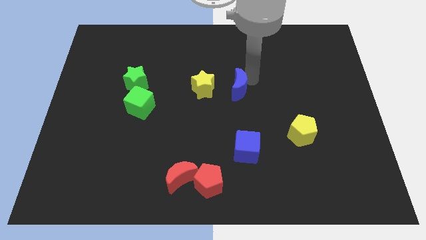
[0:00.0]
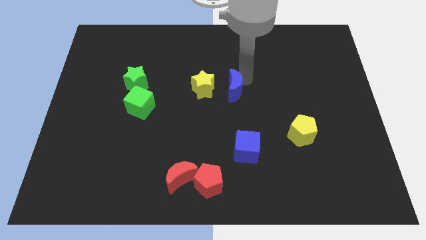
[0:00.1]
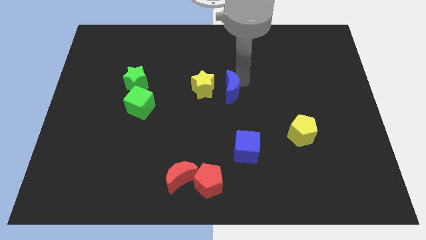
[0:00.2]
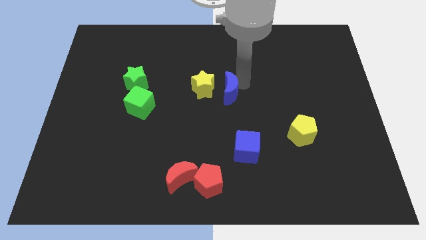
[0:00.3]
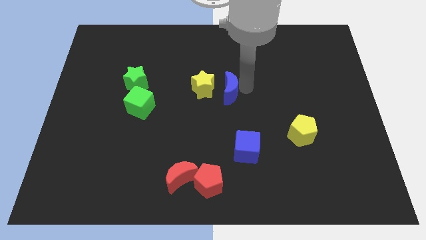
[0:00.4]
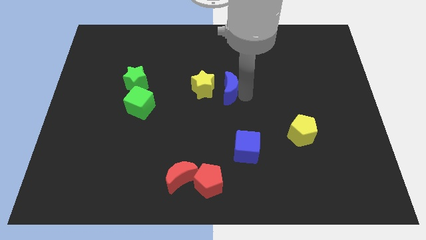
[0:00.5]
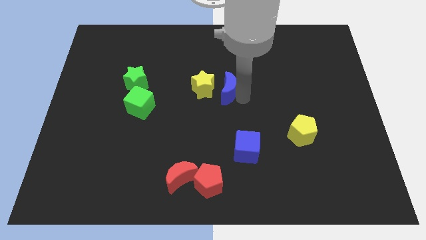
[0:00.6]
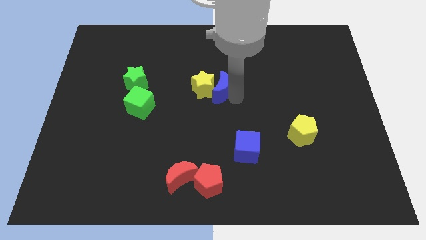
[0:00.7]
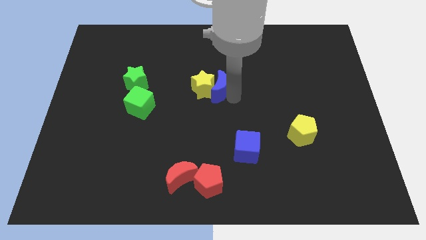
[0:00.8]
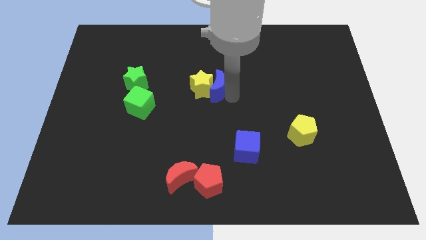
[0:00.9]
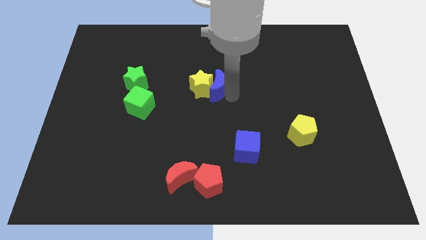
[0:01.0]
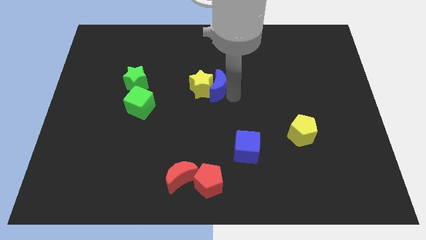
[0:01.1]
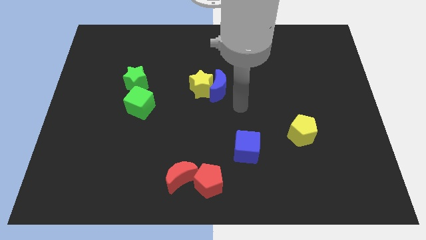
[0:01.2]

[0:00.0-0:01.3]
push the blue crescent into the yellow star

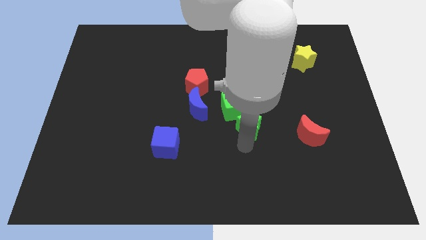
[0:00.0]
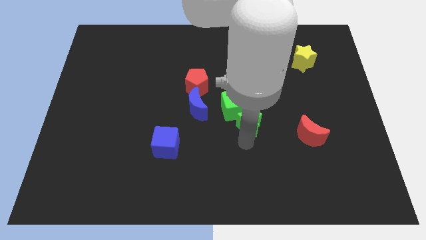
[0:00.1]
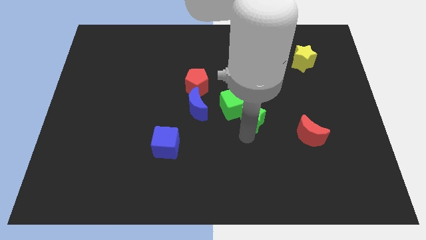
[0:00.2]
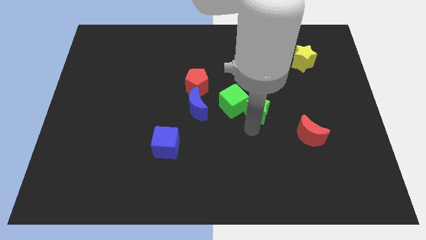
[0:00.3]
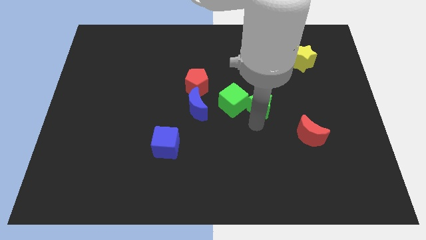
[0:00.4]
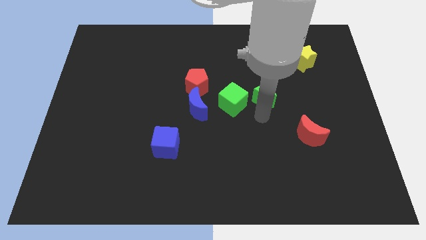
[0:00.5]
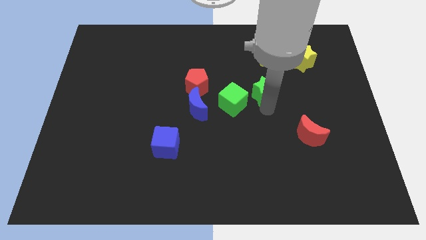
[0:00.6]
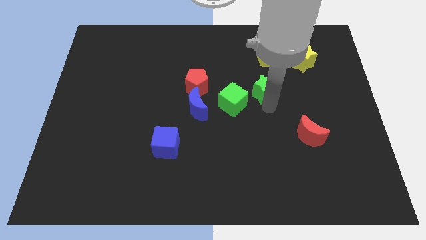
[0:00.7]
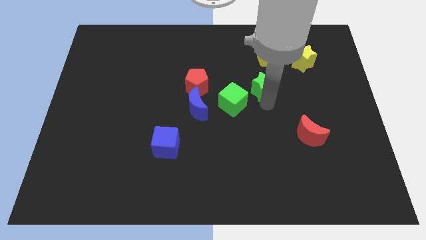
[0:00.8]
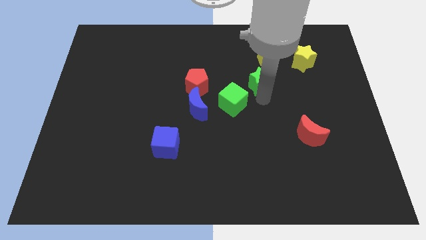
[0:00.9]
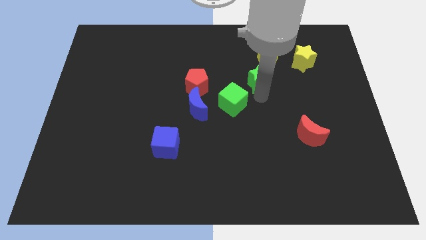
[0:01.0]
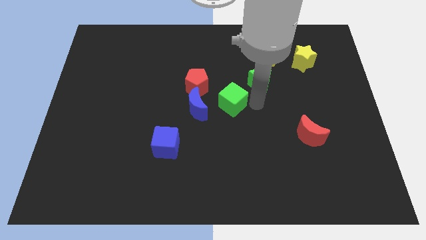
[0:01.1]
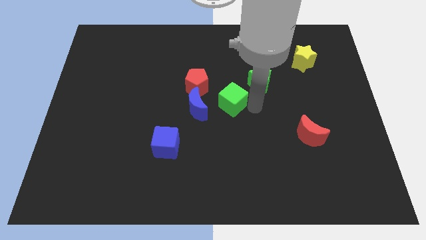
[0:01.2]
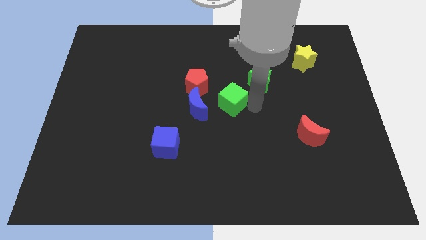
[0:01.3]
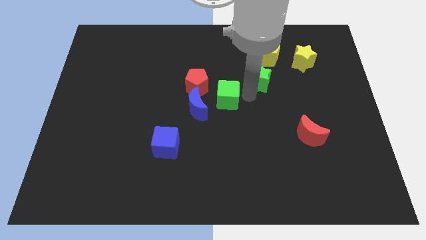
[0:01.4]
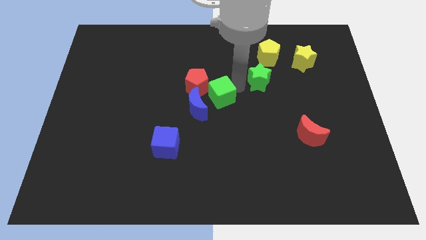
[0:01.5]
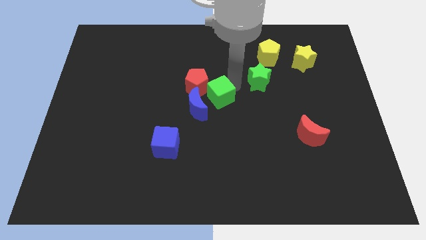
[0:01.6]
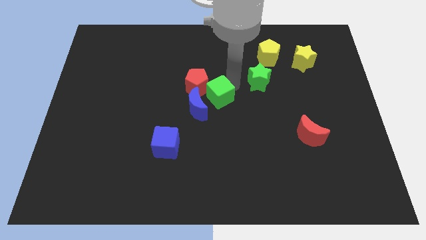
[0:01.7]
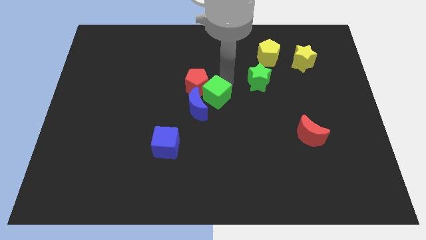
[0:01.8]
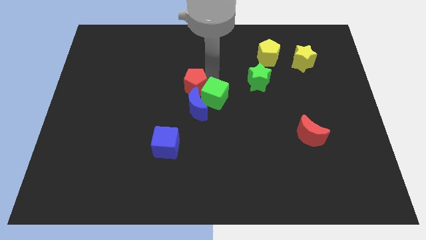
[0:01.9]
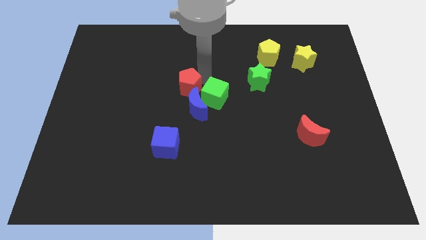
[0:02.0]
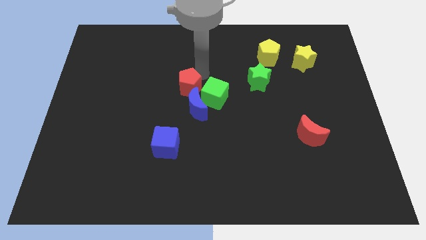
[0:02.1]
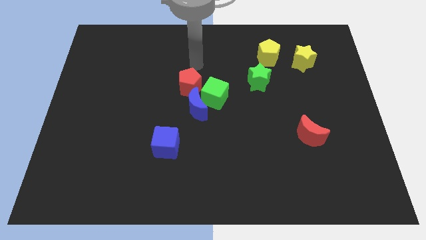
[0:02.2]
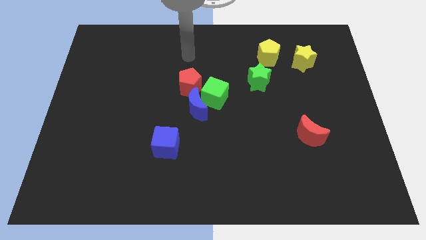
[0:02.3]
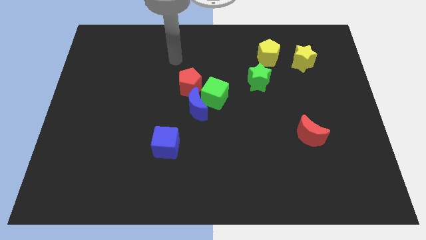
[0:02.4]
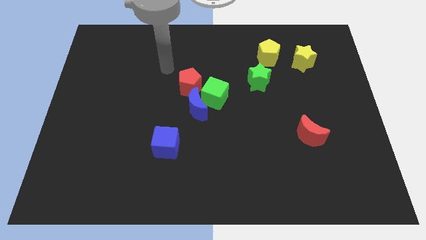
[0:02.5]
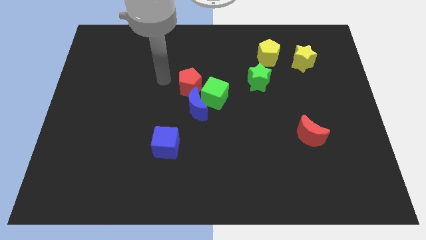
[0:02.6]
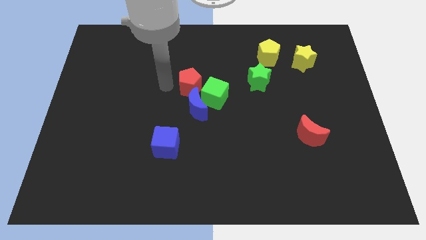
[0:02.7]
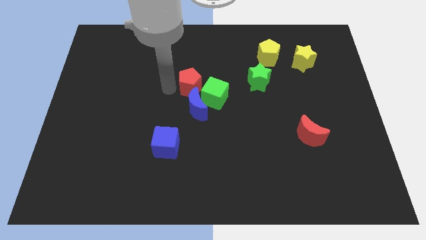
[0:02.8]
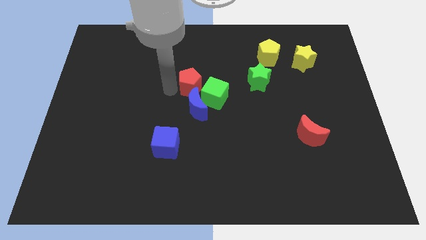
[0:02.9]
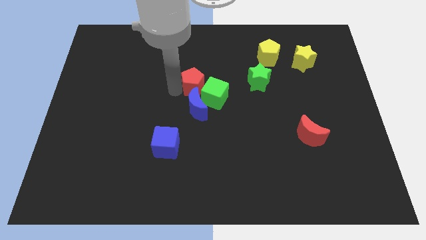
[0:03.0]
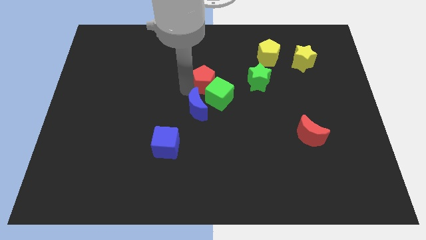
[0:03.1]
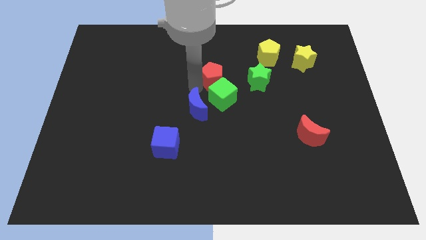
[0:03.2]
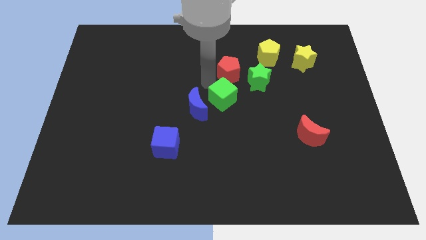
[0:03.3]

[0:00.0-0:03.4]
place the red pentagon at the top center of the green cube

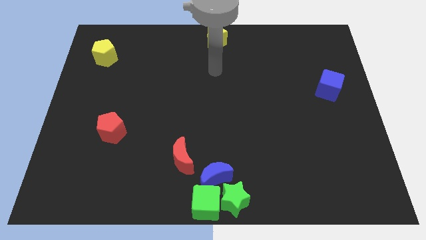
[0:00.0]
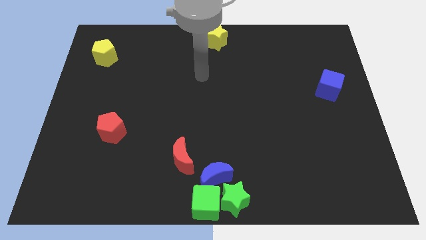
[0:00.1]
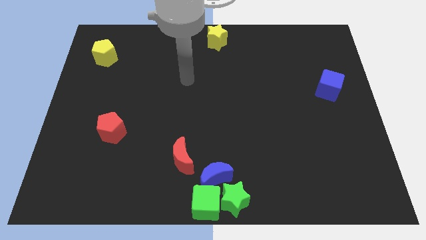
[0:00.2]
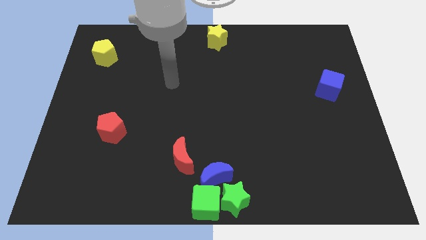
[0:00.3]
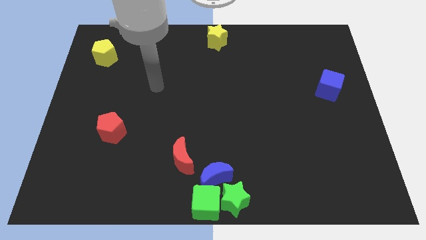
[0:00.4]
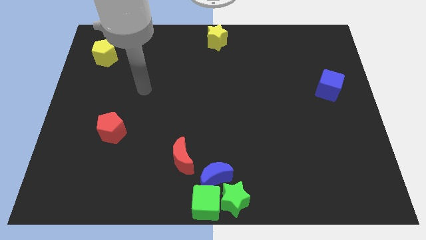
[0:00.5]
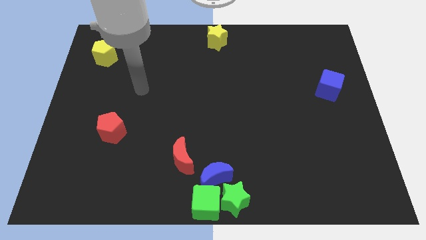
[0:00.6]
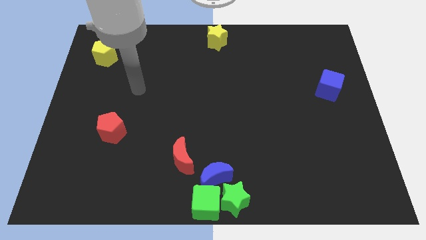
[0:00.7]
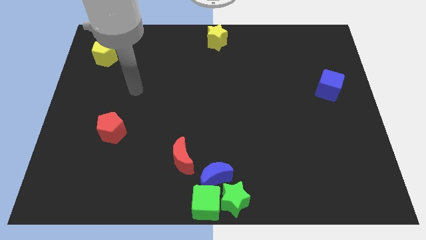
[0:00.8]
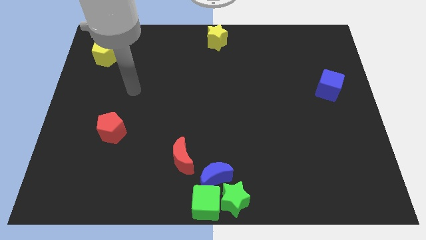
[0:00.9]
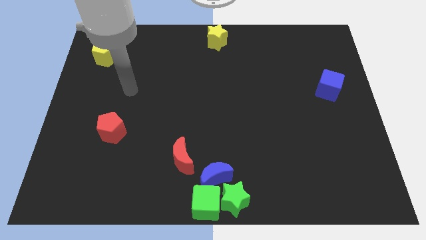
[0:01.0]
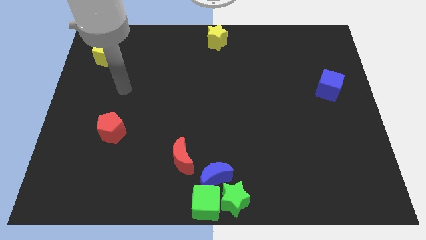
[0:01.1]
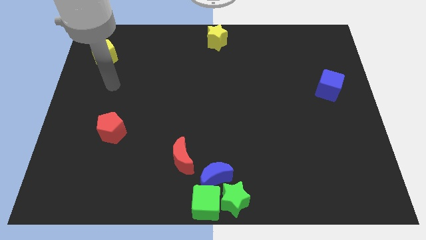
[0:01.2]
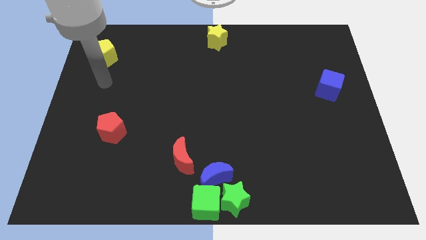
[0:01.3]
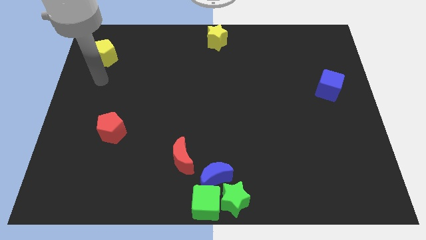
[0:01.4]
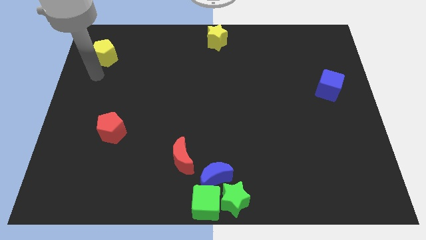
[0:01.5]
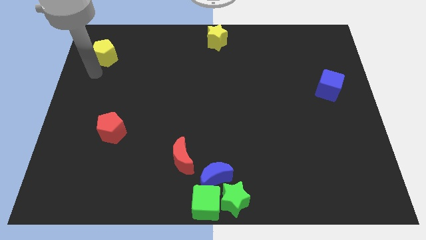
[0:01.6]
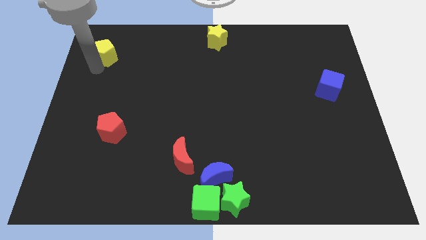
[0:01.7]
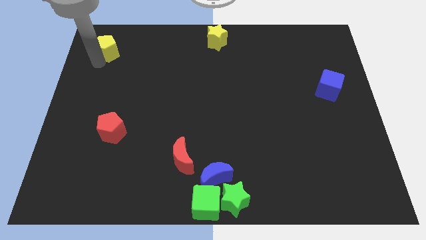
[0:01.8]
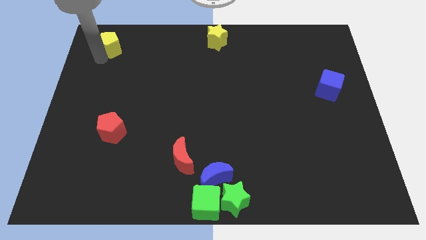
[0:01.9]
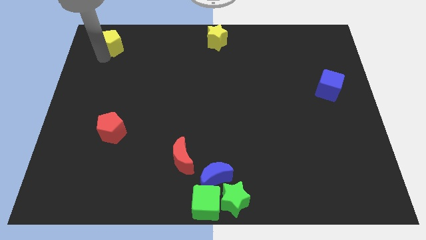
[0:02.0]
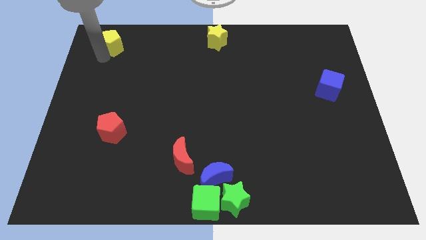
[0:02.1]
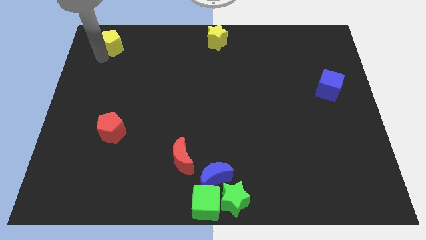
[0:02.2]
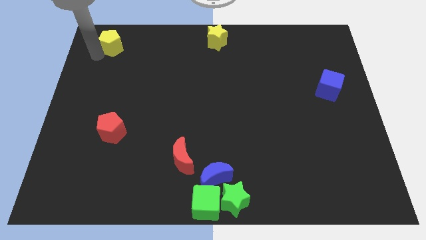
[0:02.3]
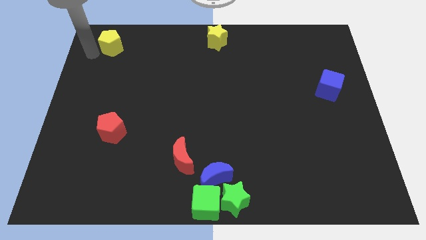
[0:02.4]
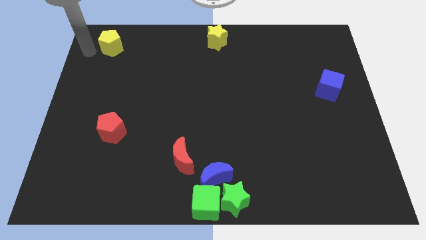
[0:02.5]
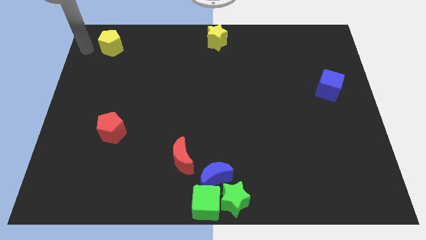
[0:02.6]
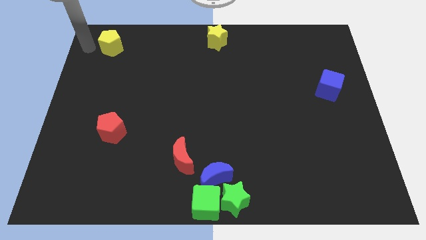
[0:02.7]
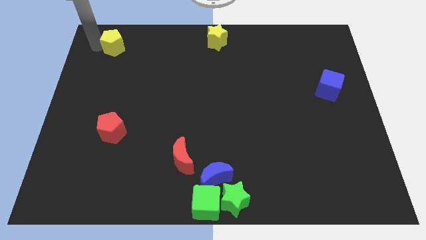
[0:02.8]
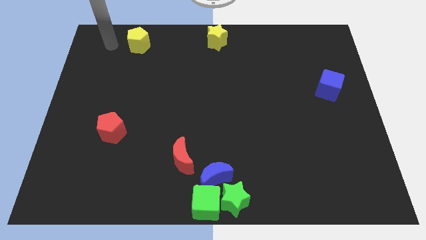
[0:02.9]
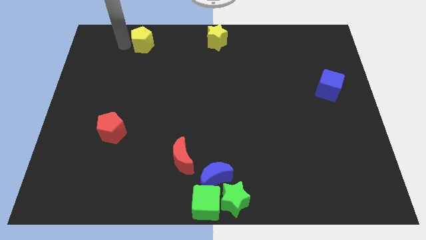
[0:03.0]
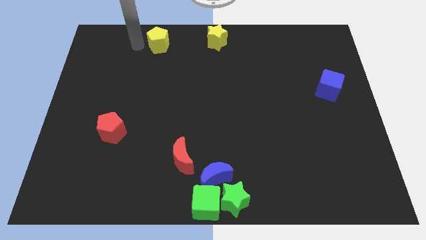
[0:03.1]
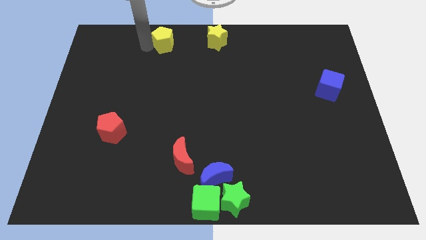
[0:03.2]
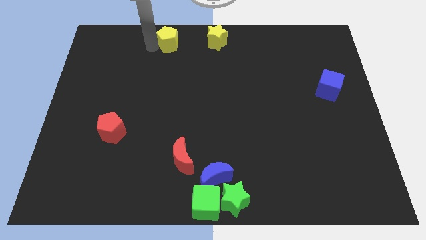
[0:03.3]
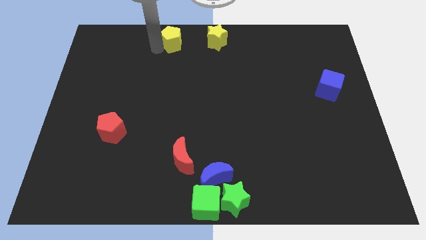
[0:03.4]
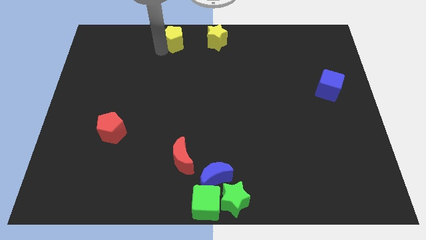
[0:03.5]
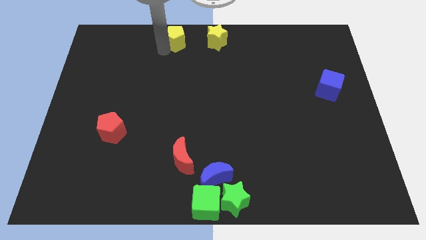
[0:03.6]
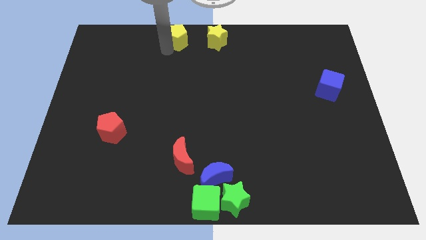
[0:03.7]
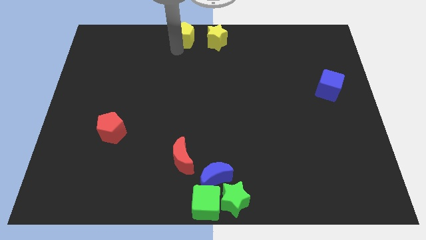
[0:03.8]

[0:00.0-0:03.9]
place the yellow pentagon left to the yellow star

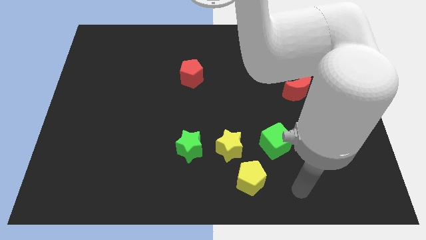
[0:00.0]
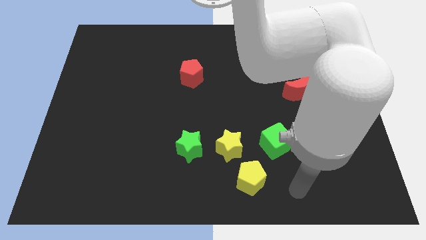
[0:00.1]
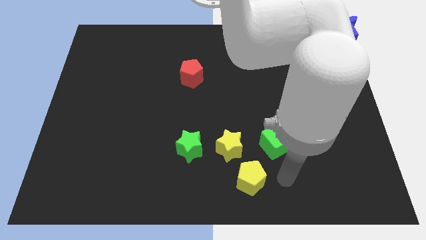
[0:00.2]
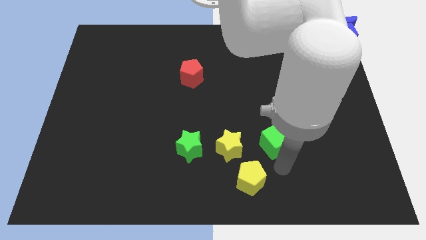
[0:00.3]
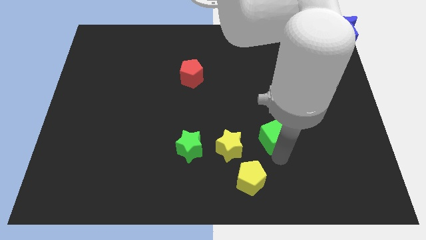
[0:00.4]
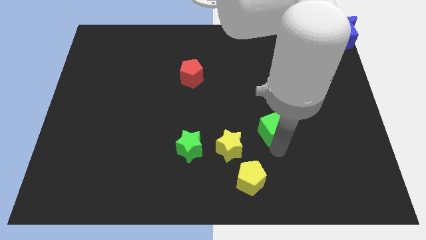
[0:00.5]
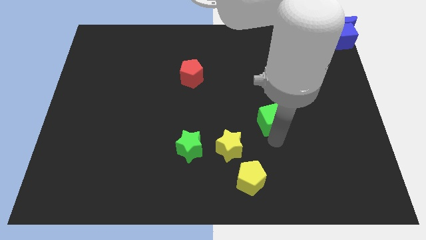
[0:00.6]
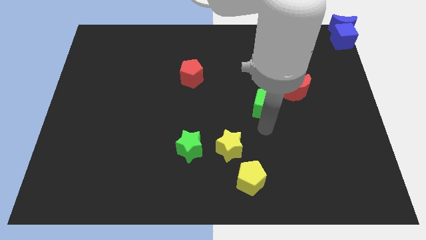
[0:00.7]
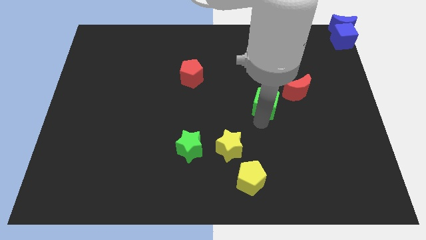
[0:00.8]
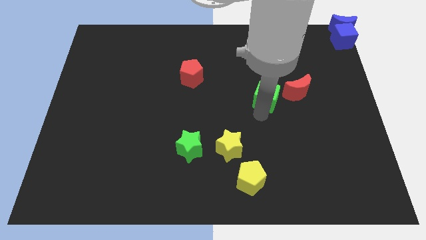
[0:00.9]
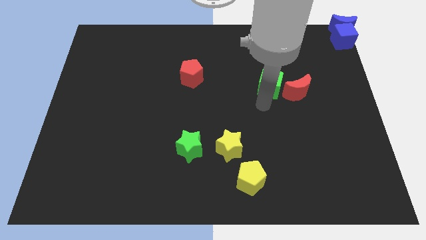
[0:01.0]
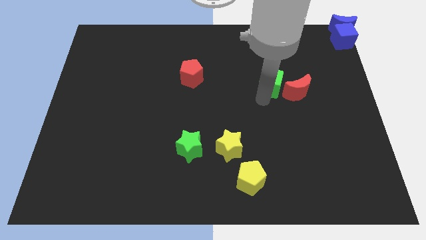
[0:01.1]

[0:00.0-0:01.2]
push green cube upwards
